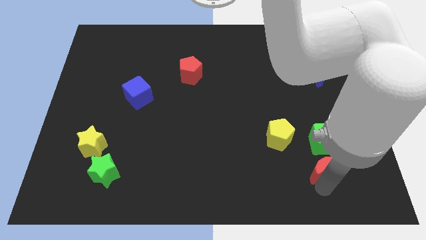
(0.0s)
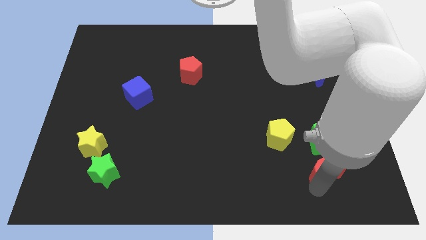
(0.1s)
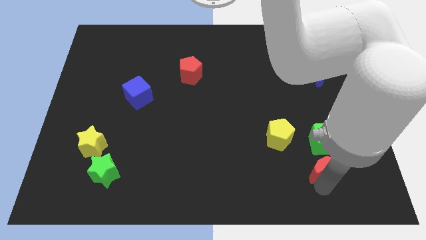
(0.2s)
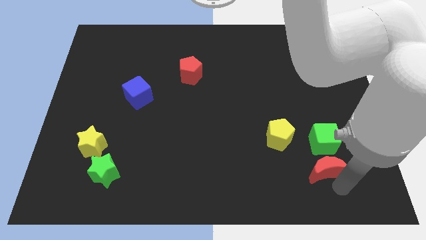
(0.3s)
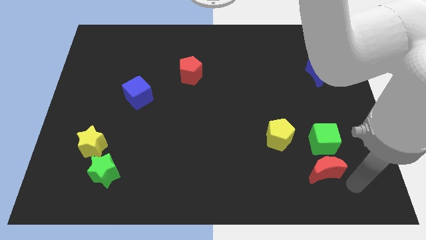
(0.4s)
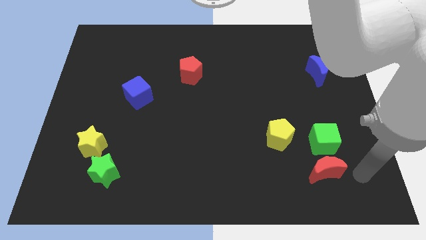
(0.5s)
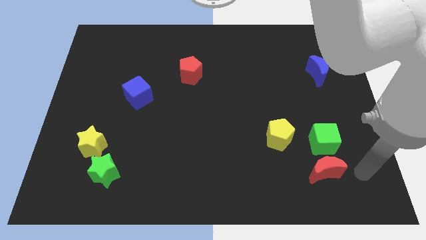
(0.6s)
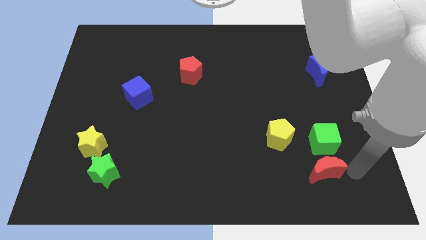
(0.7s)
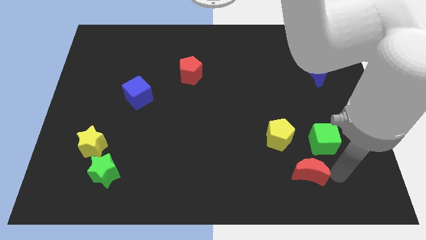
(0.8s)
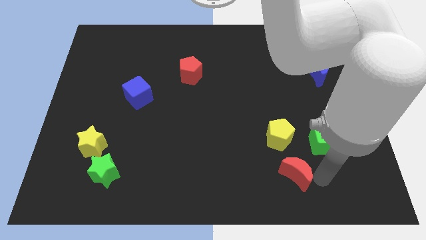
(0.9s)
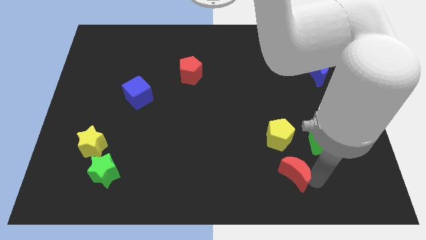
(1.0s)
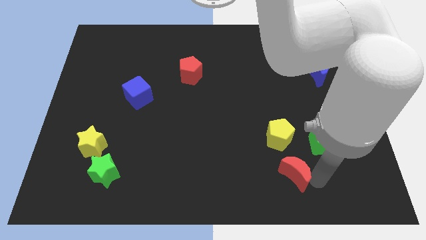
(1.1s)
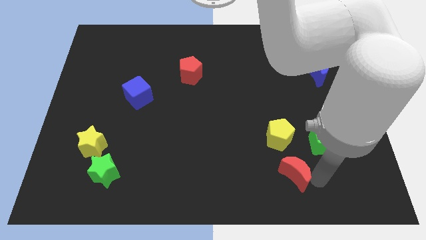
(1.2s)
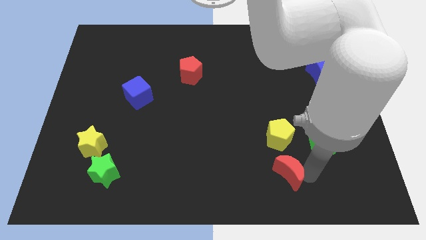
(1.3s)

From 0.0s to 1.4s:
push the red crescent to the bottom of the yellow pentagon

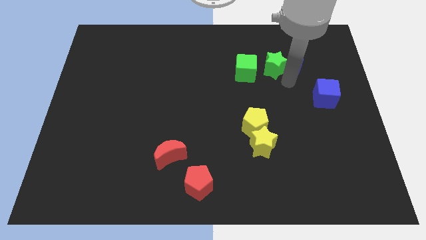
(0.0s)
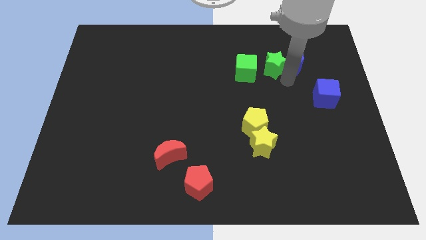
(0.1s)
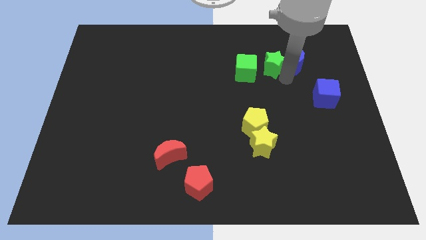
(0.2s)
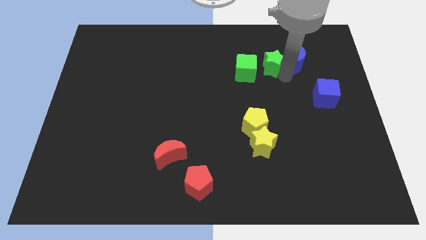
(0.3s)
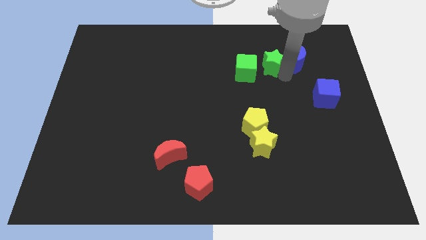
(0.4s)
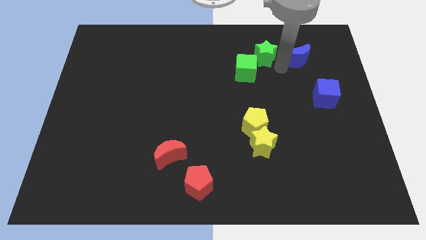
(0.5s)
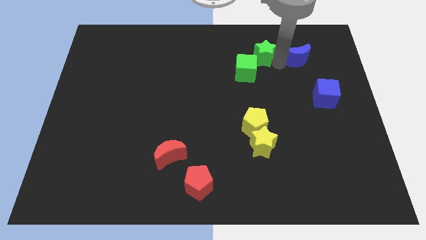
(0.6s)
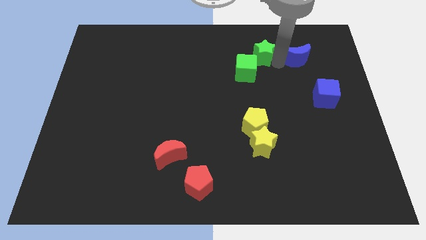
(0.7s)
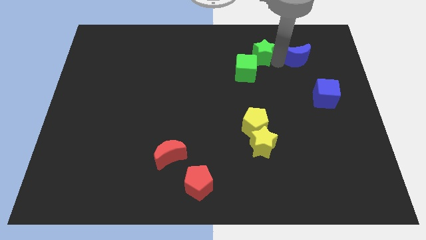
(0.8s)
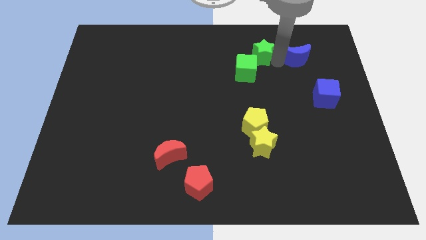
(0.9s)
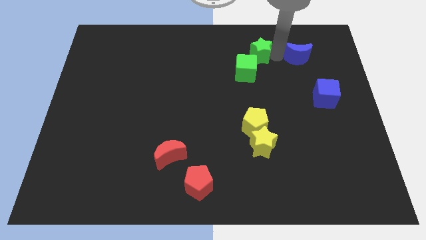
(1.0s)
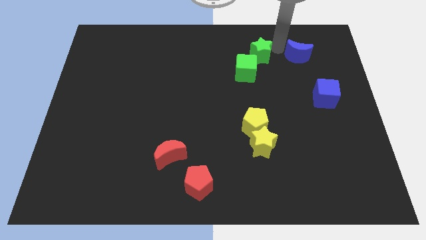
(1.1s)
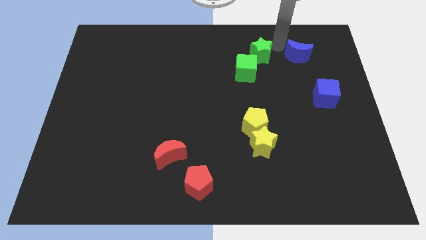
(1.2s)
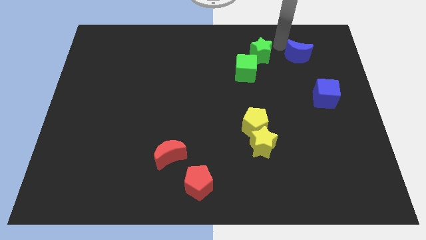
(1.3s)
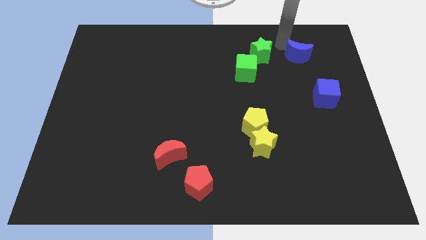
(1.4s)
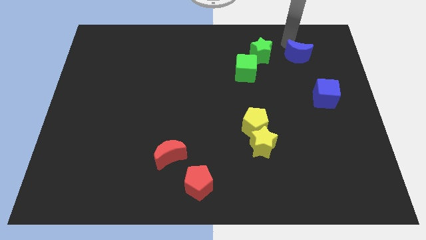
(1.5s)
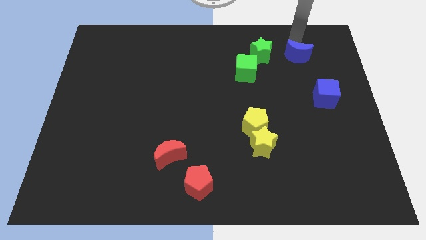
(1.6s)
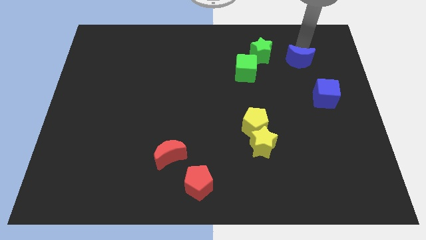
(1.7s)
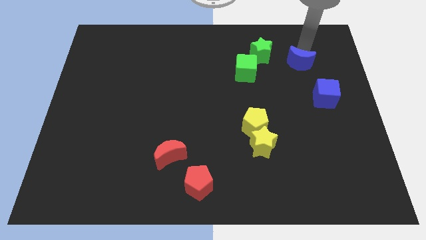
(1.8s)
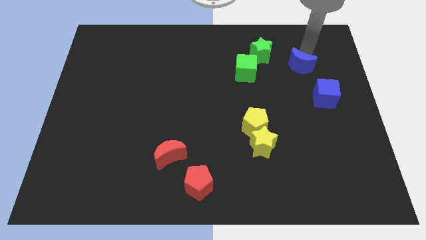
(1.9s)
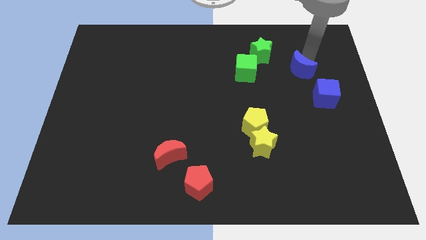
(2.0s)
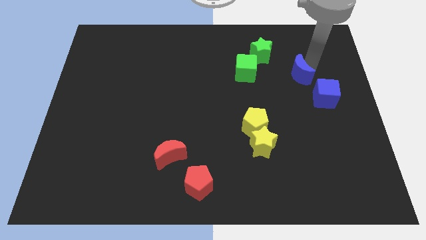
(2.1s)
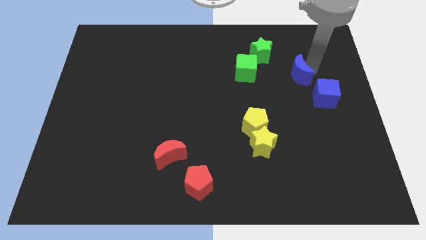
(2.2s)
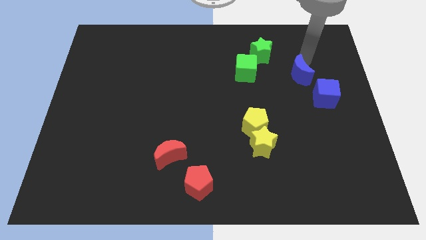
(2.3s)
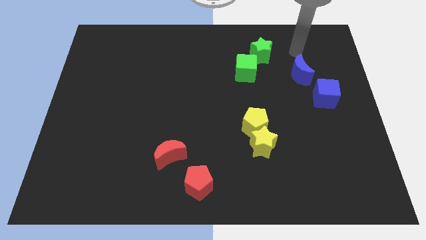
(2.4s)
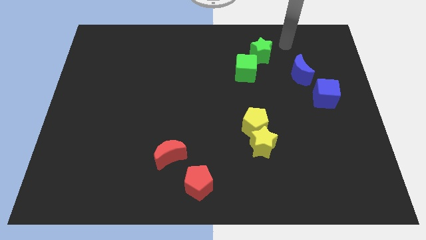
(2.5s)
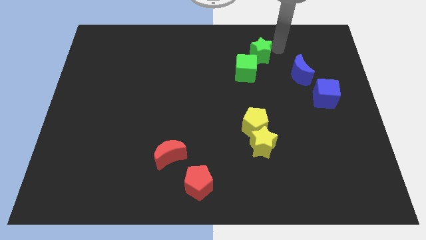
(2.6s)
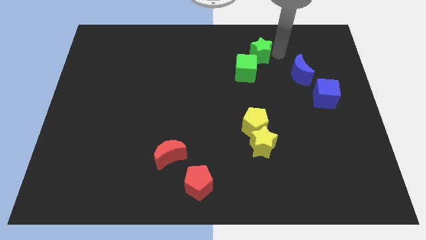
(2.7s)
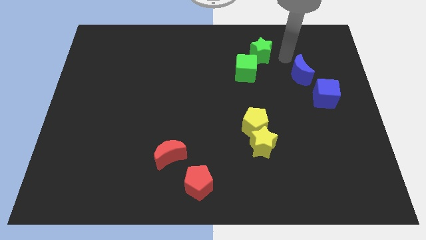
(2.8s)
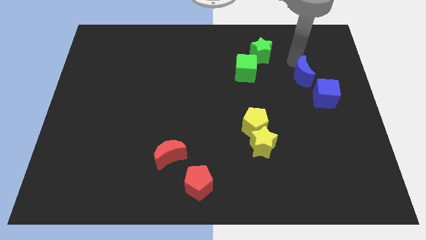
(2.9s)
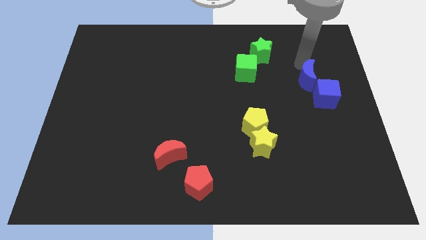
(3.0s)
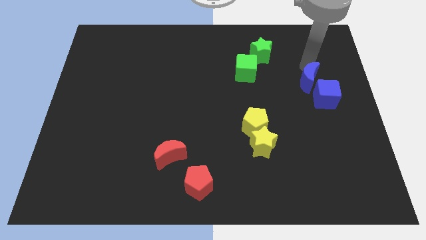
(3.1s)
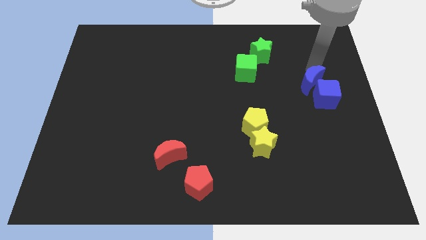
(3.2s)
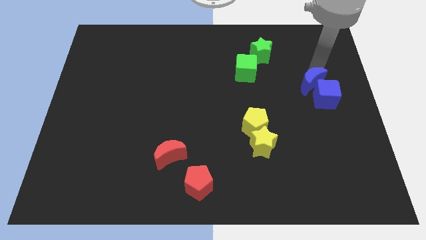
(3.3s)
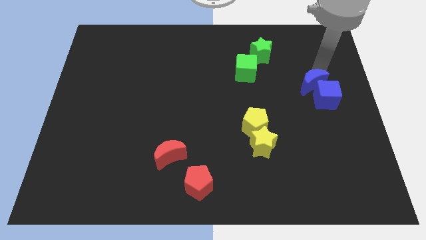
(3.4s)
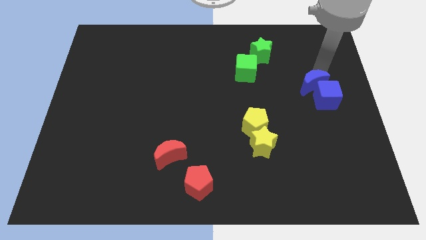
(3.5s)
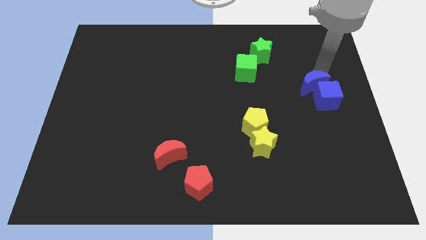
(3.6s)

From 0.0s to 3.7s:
push the blue crescent above the blue cube

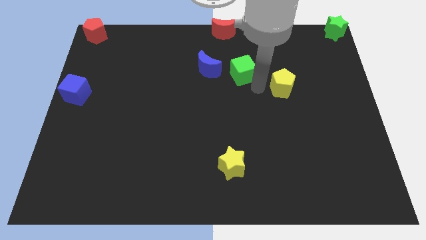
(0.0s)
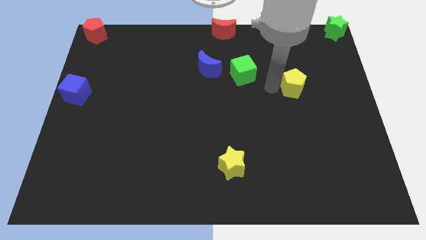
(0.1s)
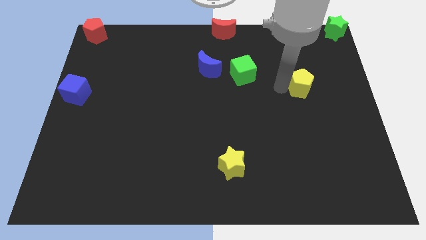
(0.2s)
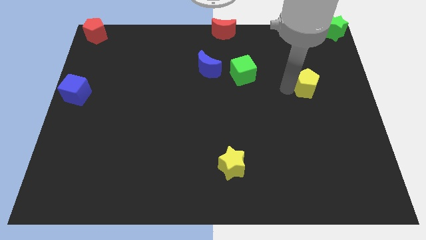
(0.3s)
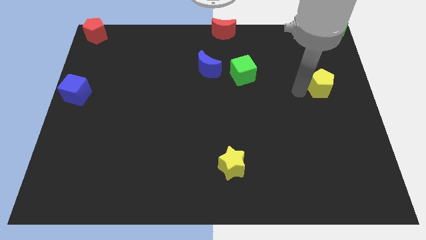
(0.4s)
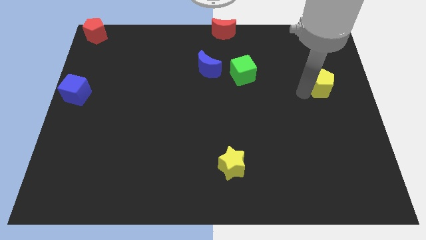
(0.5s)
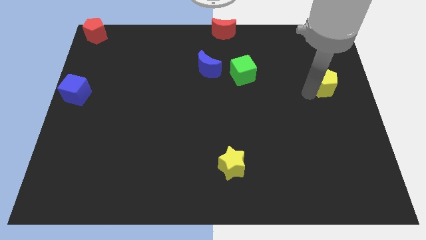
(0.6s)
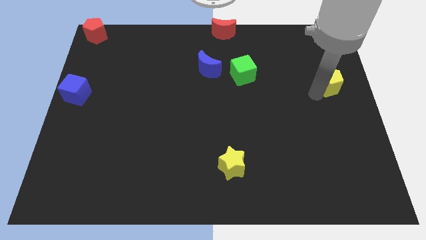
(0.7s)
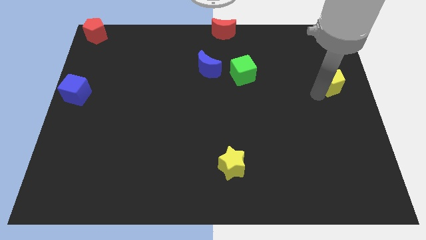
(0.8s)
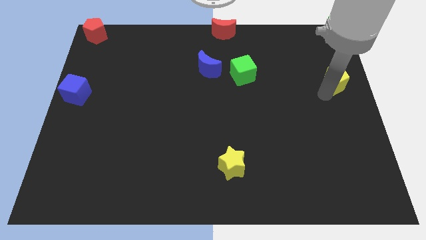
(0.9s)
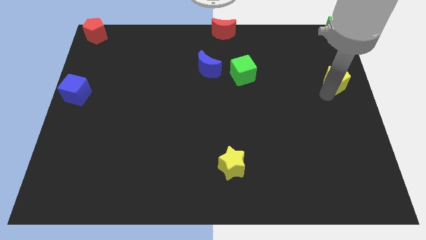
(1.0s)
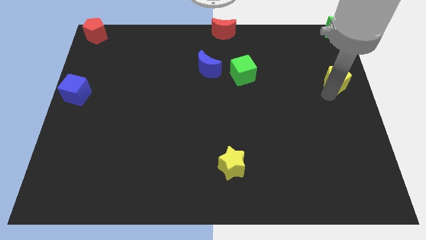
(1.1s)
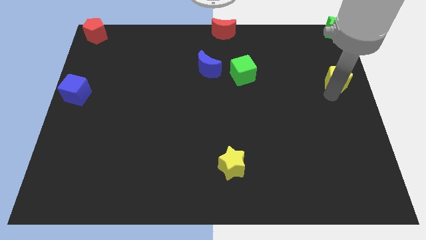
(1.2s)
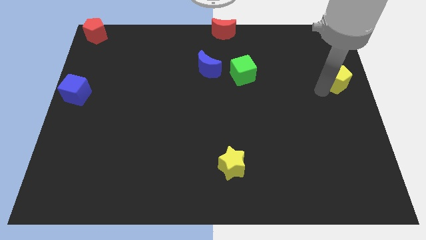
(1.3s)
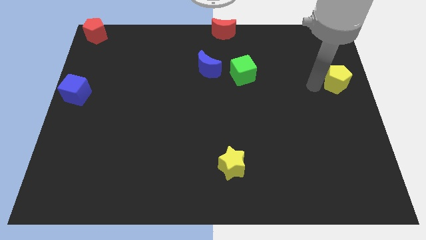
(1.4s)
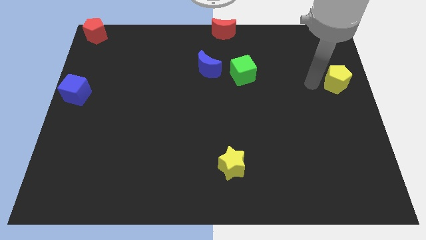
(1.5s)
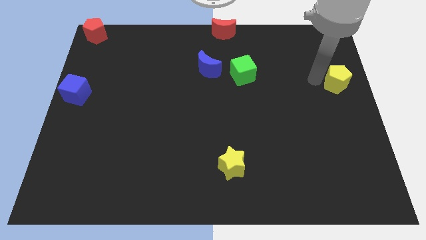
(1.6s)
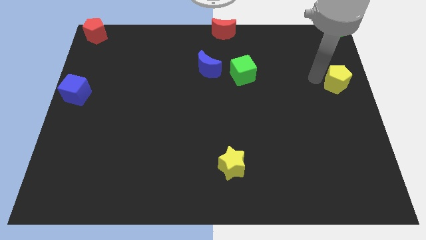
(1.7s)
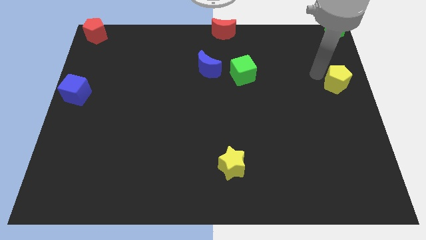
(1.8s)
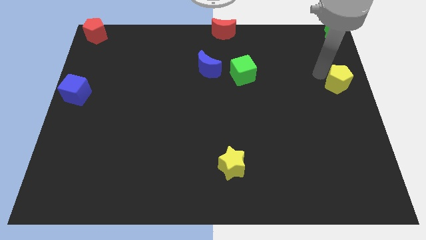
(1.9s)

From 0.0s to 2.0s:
move the yellow pentagon to the right center of the board

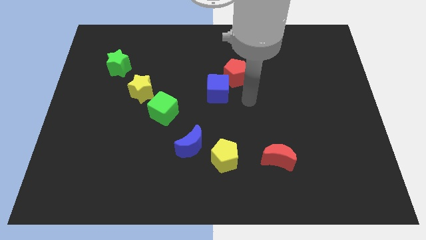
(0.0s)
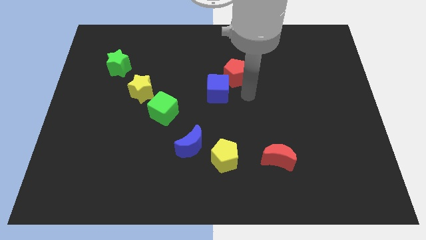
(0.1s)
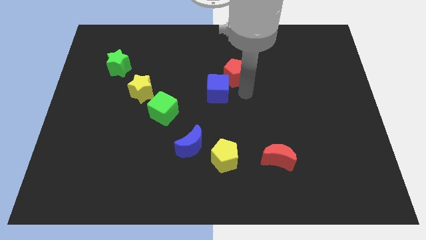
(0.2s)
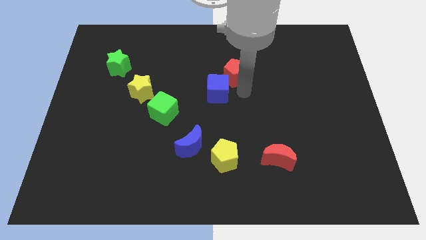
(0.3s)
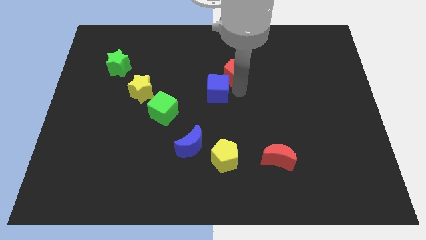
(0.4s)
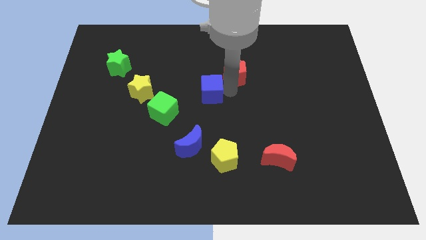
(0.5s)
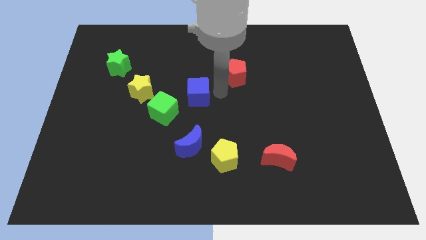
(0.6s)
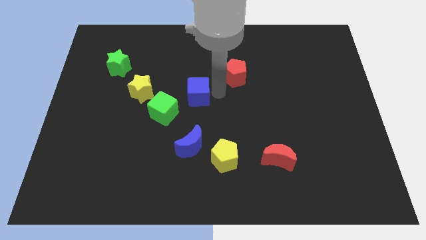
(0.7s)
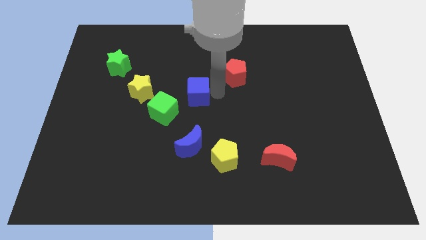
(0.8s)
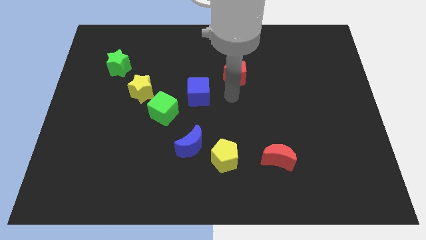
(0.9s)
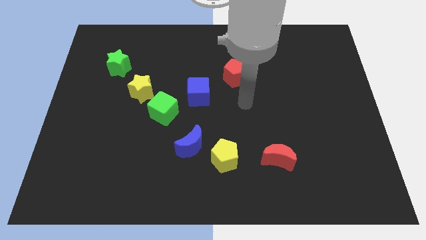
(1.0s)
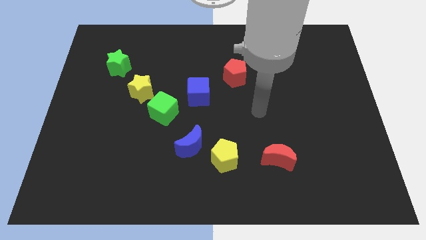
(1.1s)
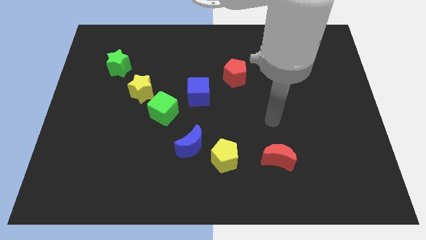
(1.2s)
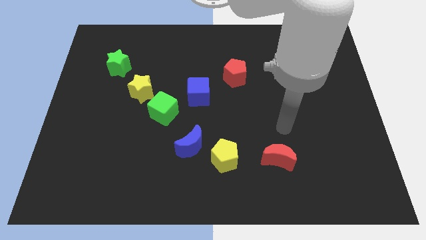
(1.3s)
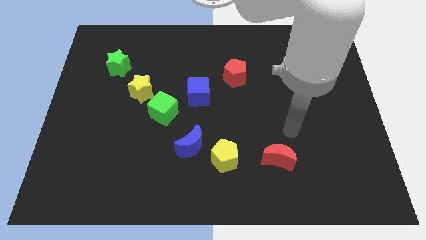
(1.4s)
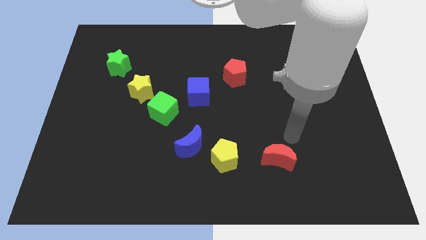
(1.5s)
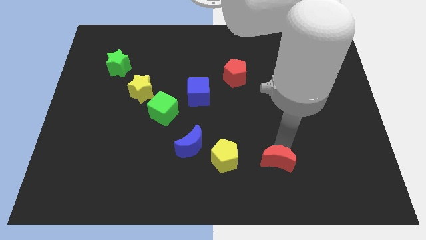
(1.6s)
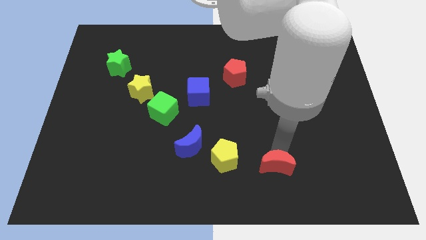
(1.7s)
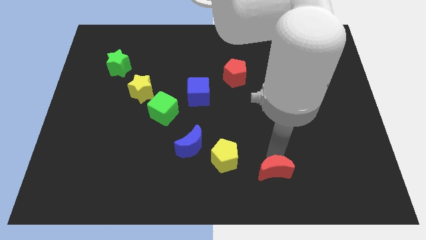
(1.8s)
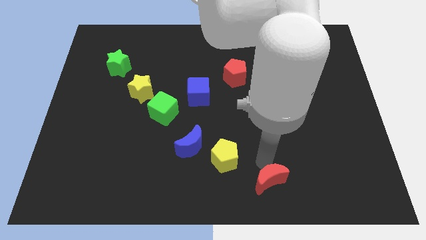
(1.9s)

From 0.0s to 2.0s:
move the blue cube in between the red pentagon and green cube
